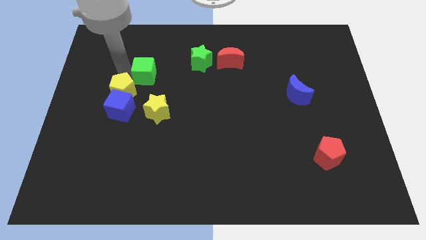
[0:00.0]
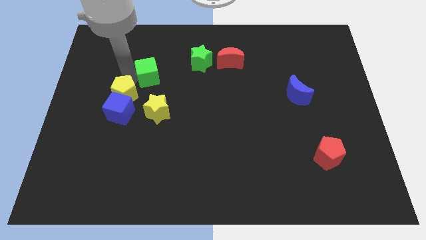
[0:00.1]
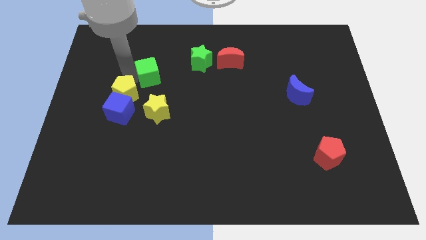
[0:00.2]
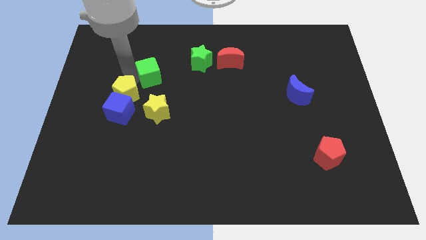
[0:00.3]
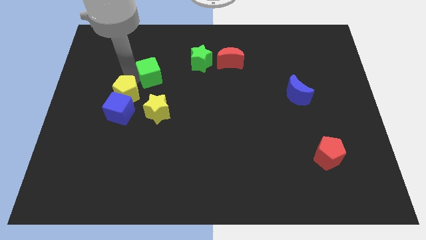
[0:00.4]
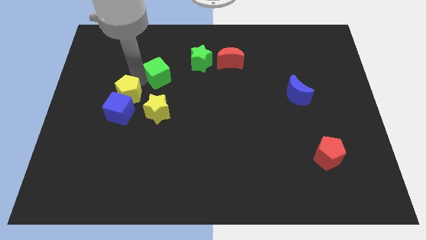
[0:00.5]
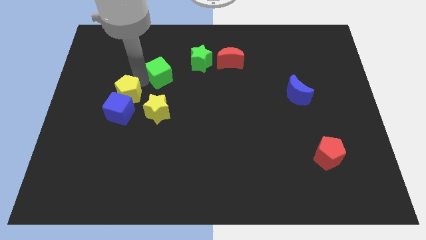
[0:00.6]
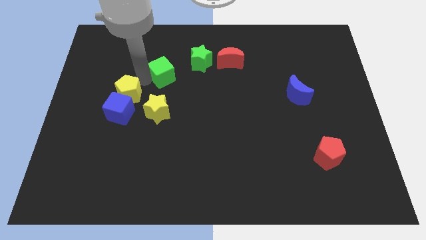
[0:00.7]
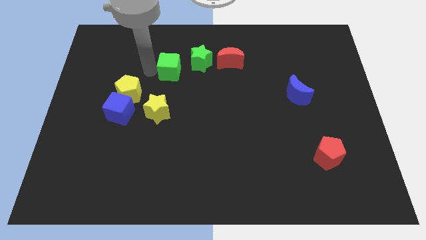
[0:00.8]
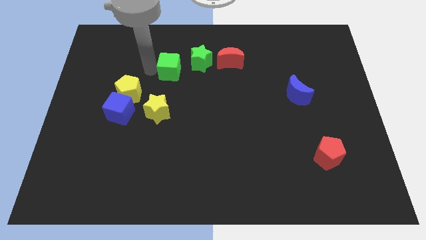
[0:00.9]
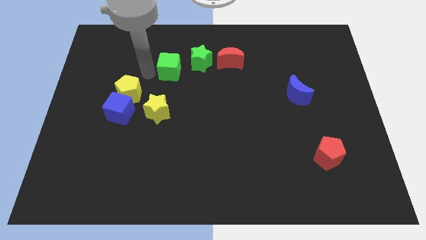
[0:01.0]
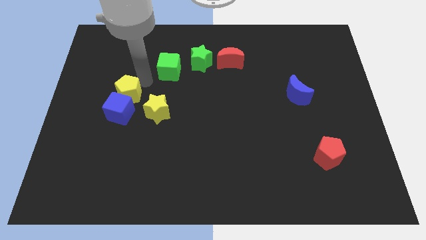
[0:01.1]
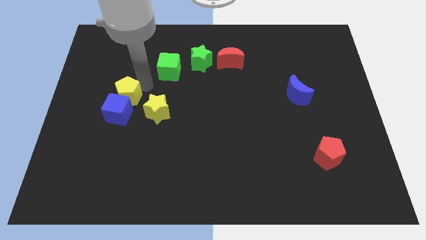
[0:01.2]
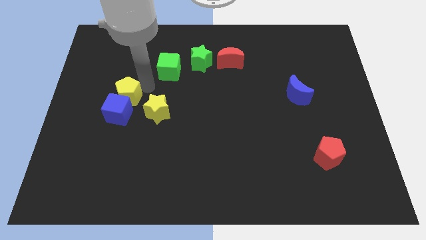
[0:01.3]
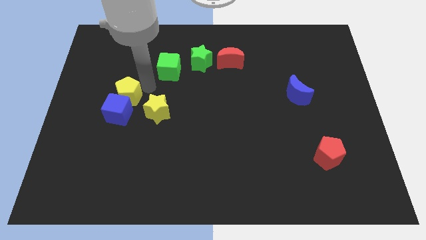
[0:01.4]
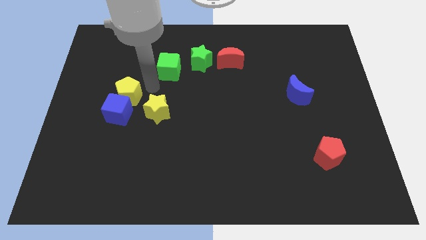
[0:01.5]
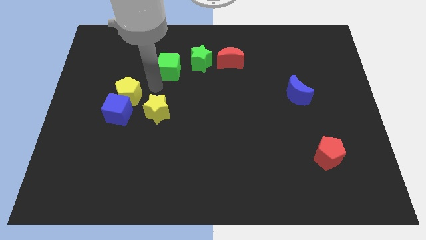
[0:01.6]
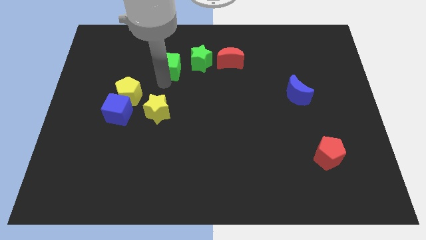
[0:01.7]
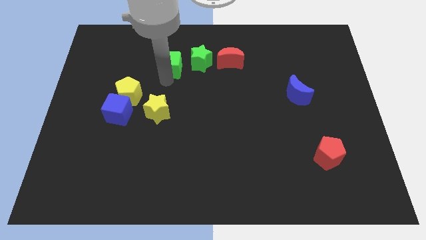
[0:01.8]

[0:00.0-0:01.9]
move the green cube to the left side of the green star

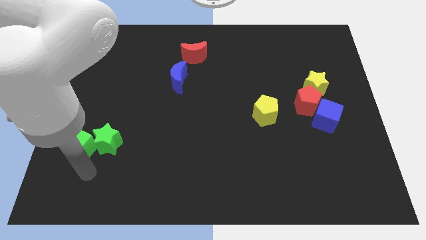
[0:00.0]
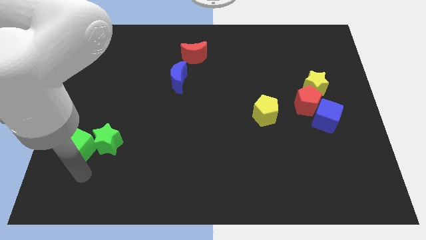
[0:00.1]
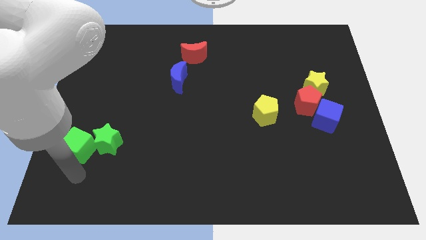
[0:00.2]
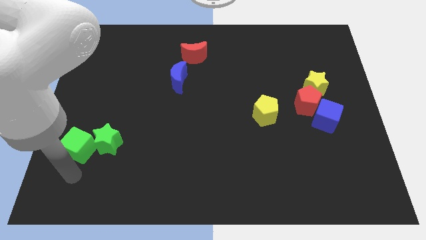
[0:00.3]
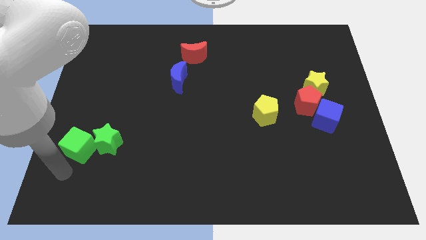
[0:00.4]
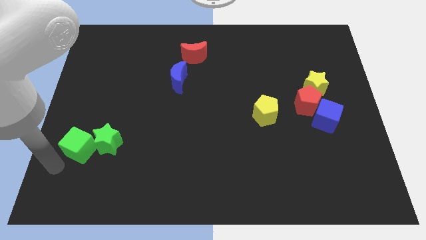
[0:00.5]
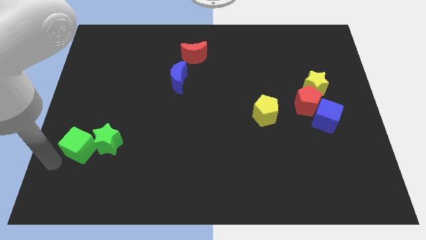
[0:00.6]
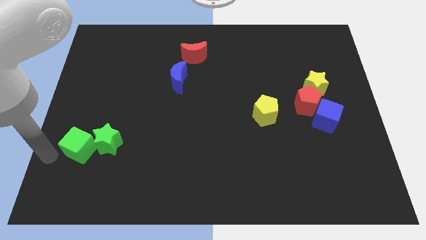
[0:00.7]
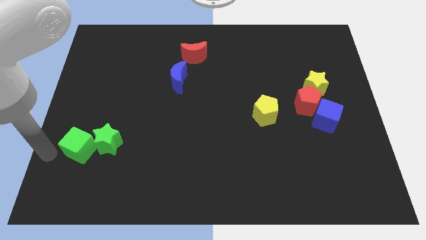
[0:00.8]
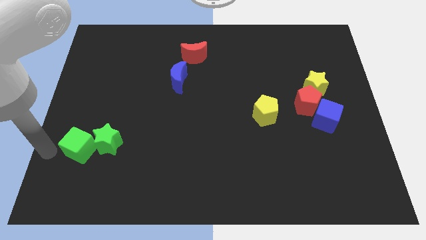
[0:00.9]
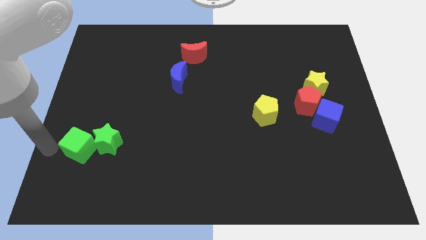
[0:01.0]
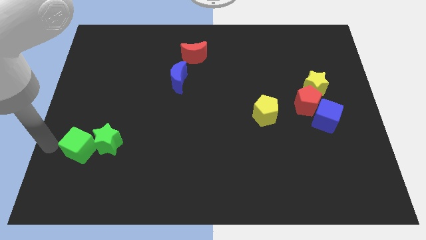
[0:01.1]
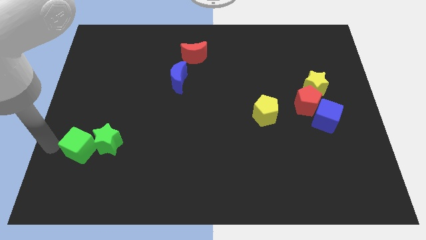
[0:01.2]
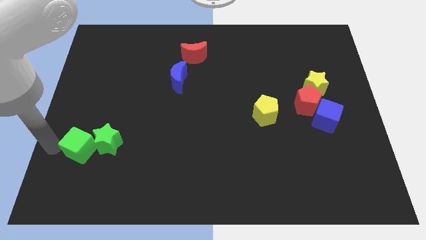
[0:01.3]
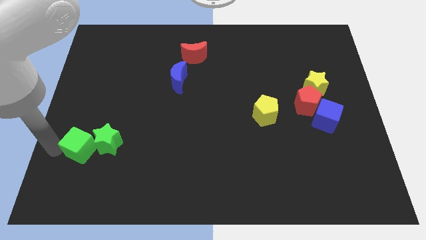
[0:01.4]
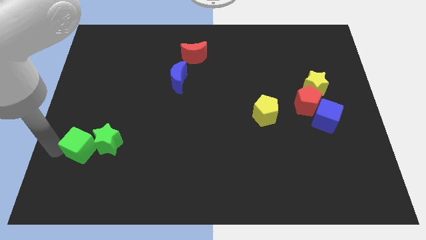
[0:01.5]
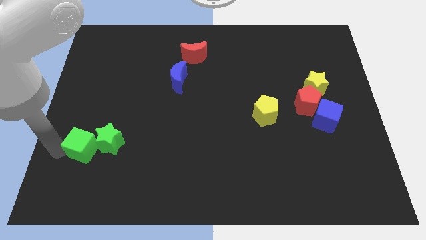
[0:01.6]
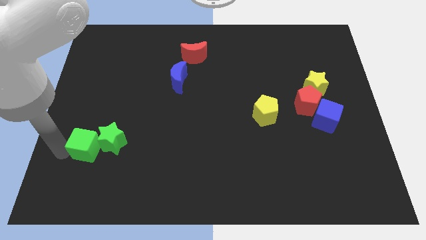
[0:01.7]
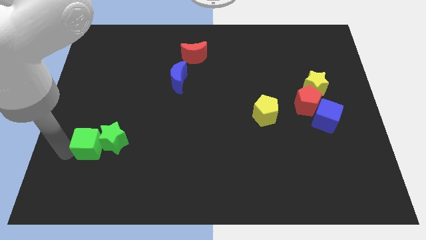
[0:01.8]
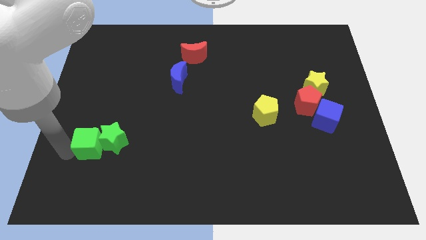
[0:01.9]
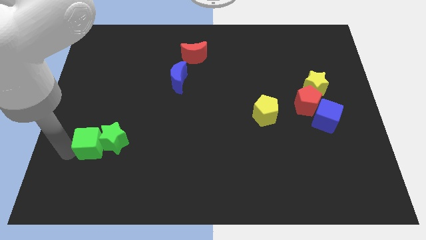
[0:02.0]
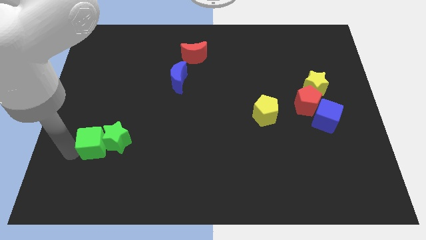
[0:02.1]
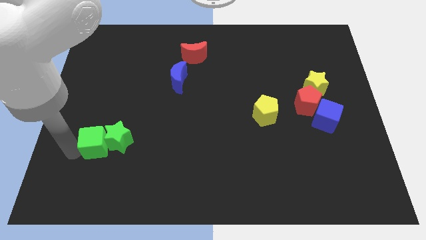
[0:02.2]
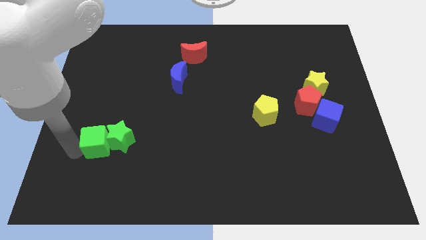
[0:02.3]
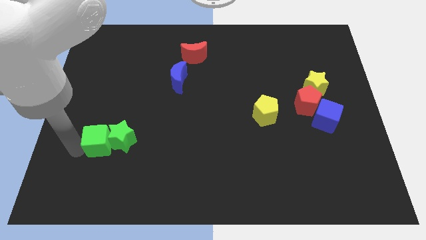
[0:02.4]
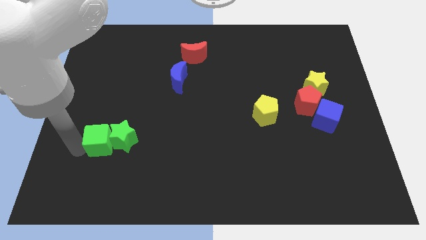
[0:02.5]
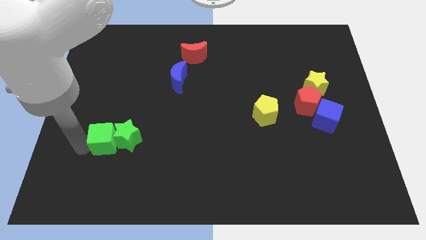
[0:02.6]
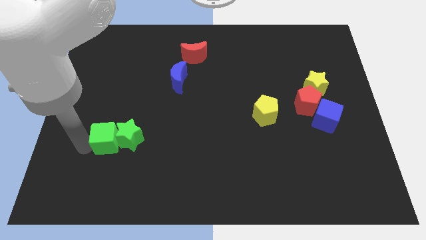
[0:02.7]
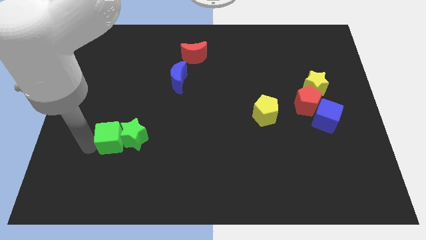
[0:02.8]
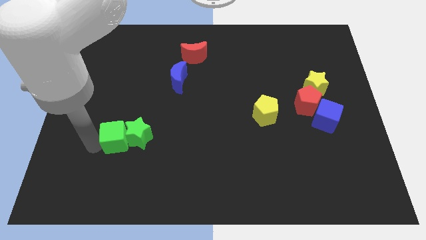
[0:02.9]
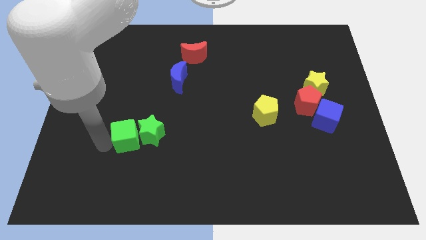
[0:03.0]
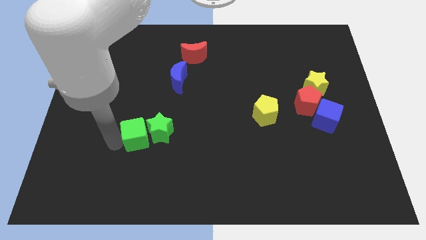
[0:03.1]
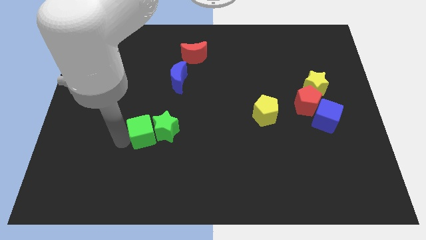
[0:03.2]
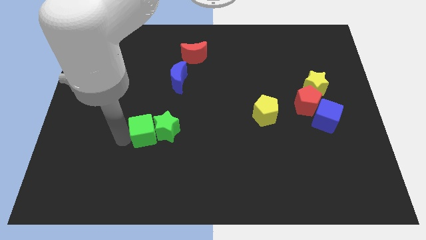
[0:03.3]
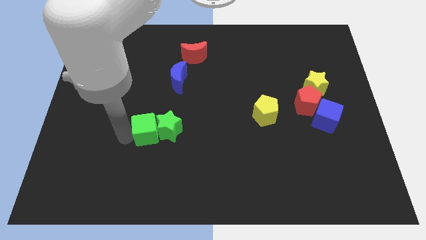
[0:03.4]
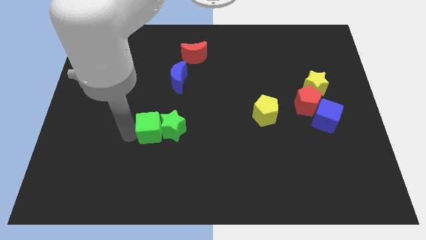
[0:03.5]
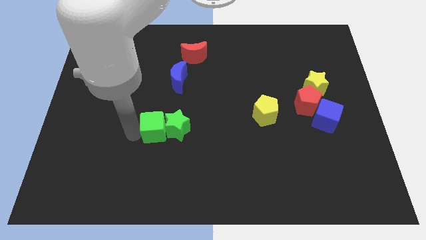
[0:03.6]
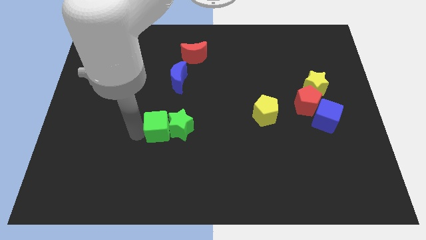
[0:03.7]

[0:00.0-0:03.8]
move the green blocks vertically below the blue crescent

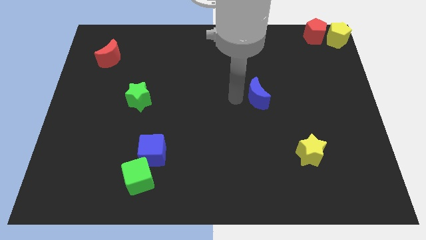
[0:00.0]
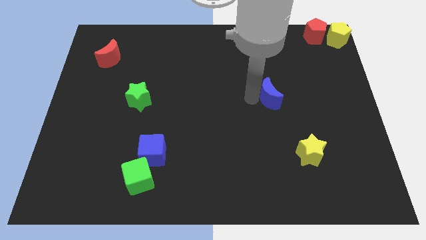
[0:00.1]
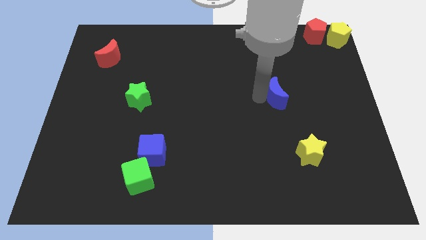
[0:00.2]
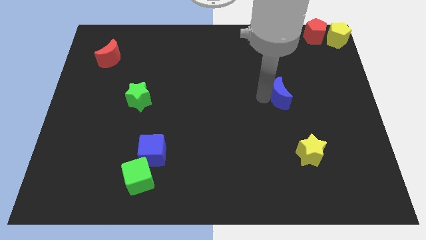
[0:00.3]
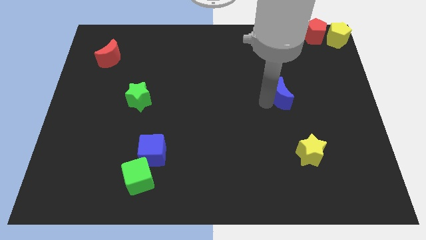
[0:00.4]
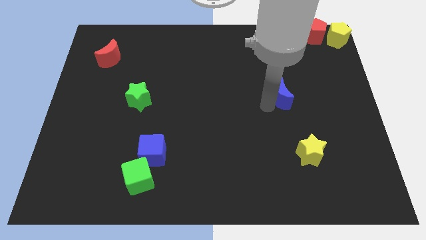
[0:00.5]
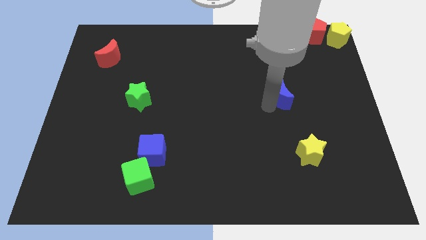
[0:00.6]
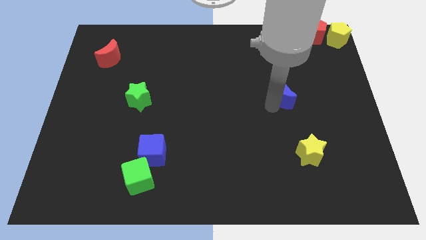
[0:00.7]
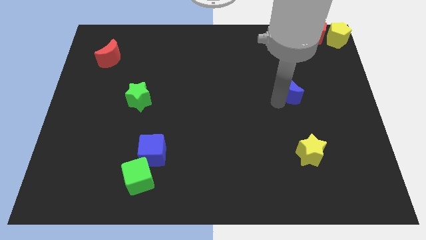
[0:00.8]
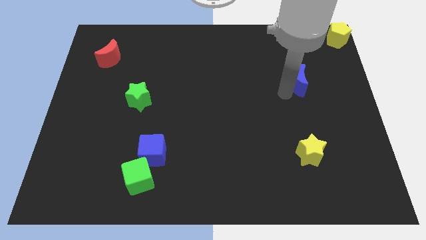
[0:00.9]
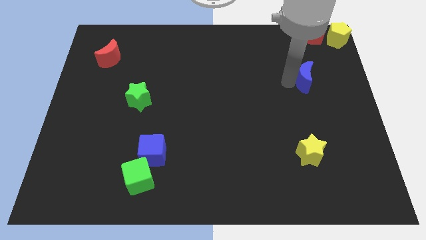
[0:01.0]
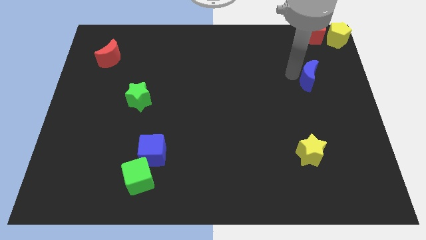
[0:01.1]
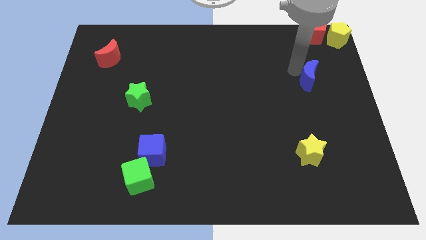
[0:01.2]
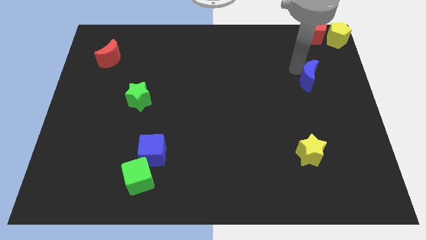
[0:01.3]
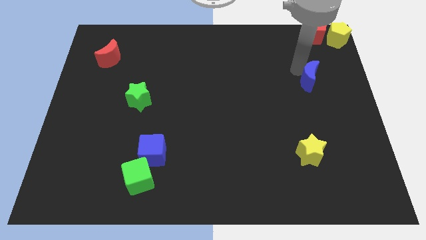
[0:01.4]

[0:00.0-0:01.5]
move the blue crescent to the right of the board

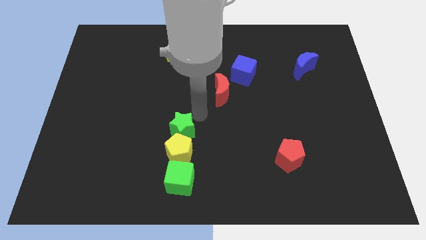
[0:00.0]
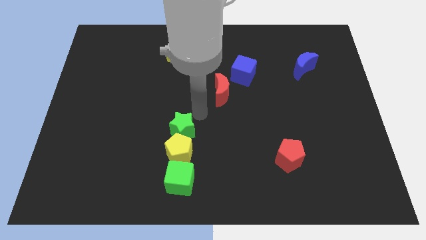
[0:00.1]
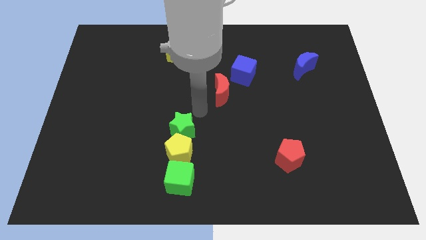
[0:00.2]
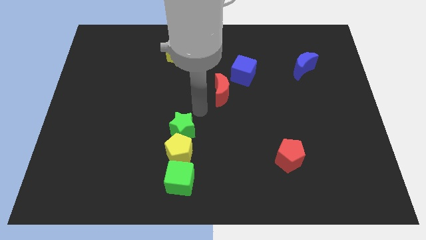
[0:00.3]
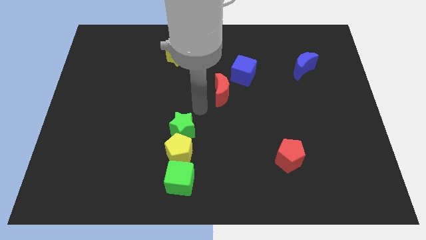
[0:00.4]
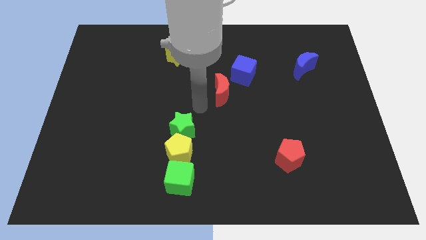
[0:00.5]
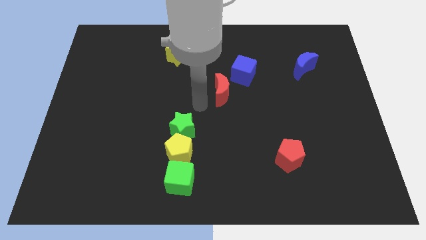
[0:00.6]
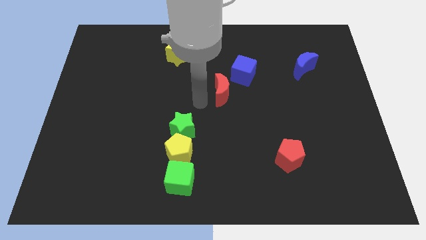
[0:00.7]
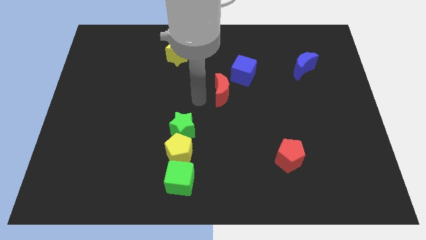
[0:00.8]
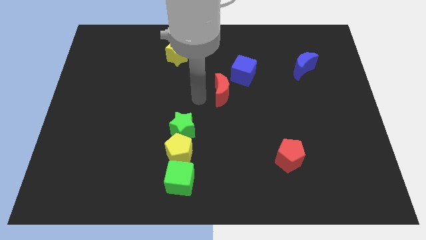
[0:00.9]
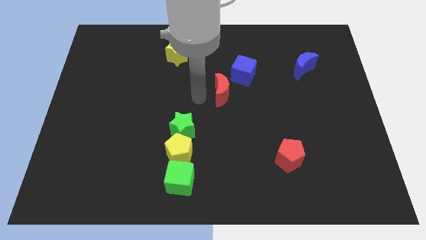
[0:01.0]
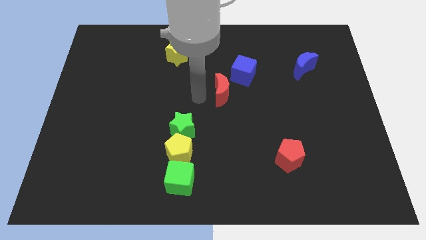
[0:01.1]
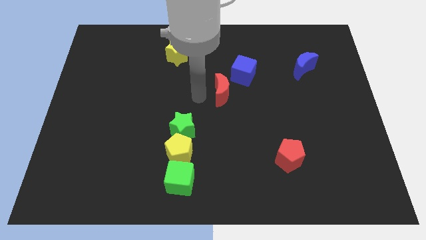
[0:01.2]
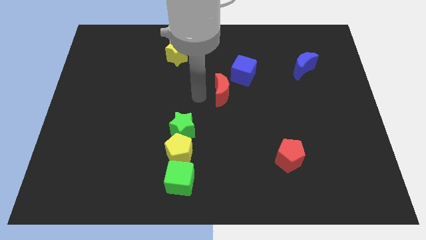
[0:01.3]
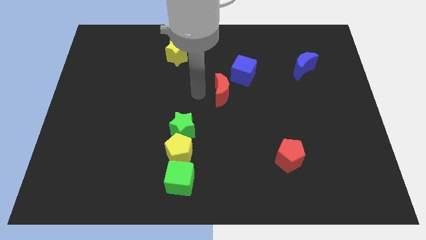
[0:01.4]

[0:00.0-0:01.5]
point your arm to the left side red moon

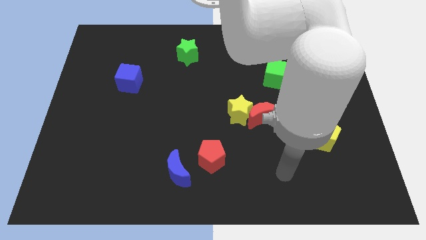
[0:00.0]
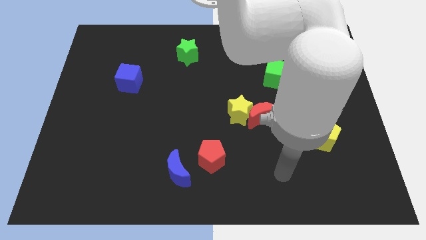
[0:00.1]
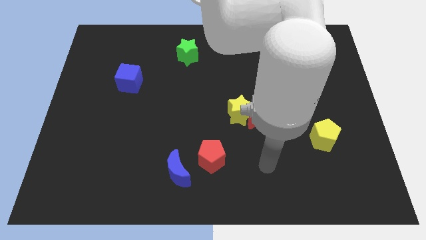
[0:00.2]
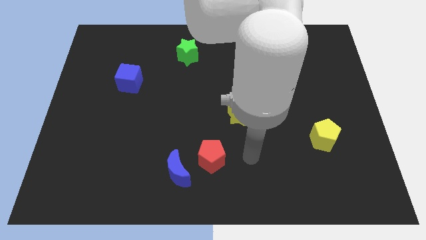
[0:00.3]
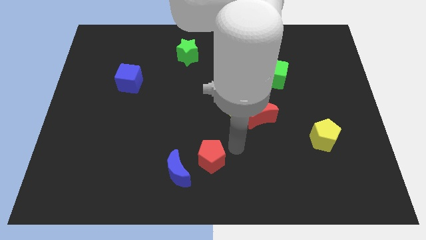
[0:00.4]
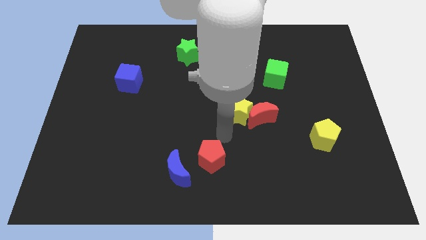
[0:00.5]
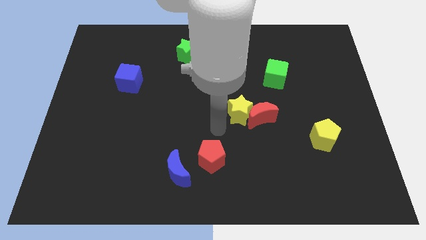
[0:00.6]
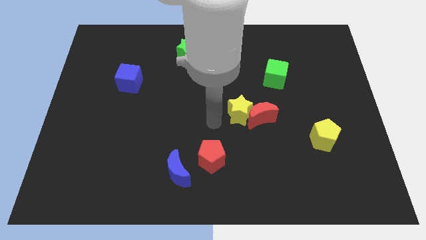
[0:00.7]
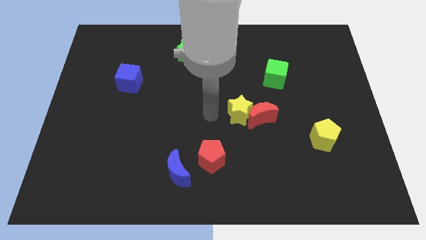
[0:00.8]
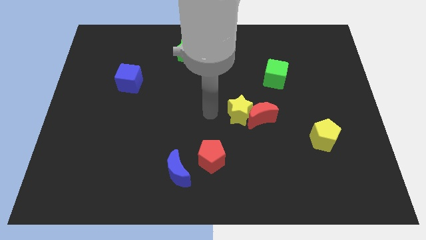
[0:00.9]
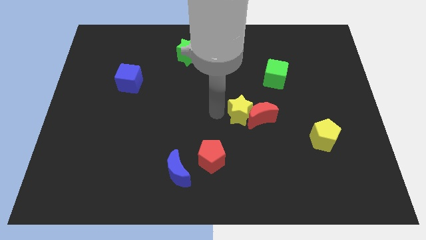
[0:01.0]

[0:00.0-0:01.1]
move your arm towards the yellow star
